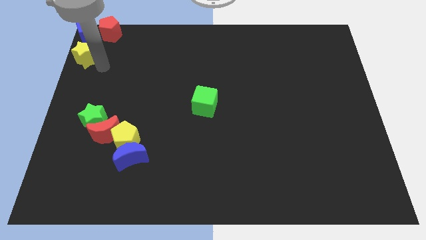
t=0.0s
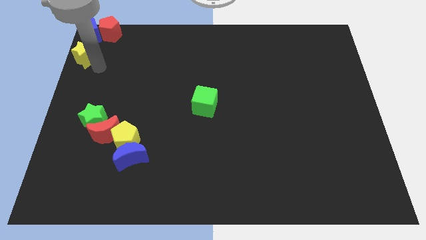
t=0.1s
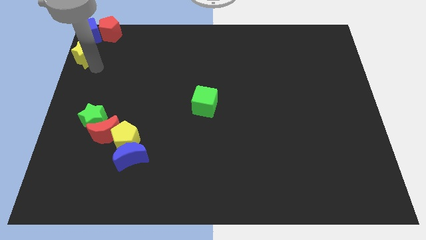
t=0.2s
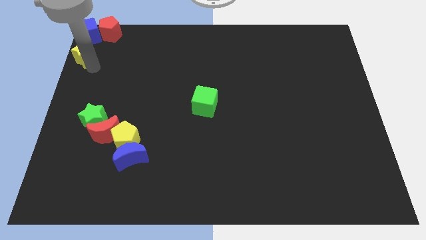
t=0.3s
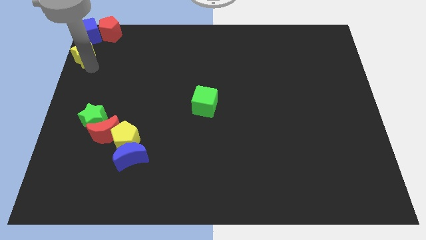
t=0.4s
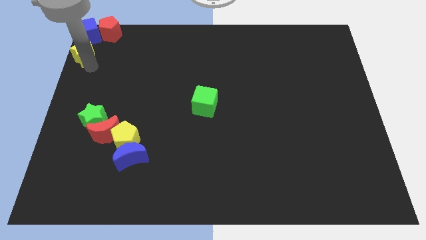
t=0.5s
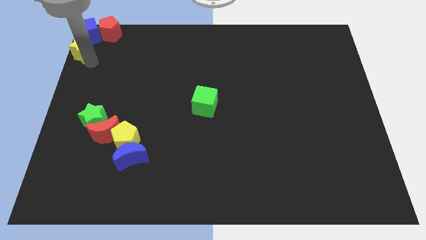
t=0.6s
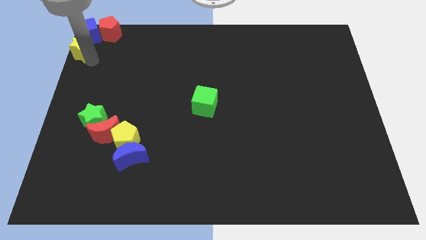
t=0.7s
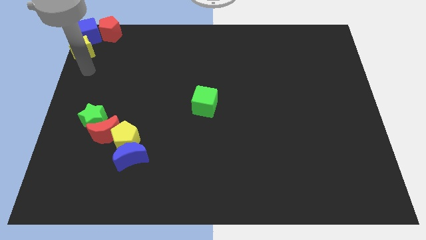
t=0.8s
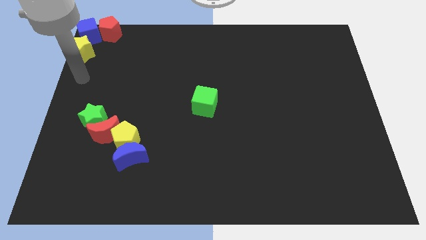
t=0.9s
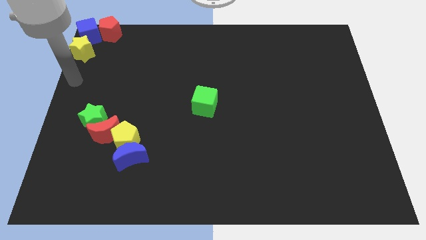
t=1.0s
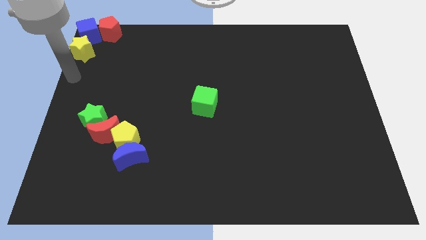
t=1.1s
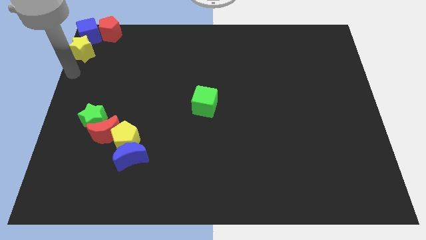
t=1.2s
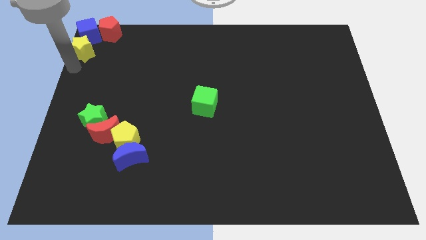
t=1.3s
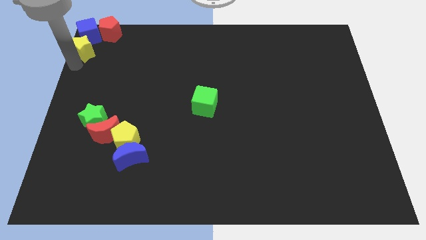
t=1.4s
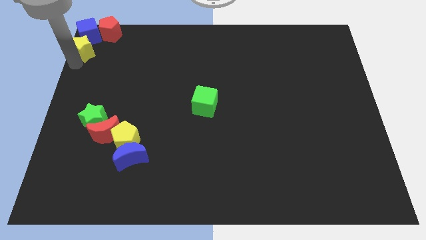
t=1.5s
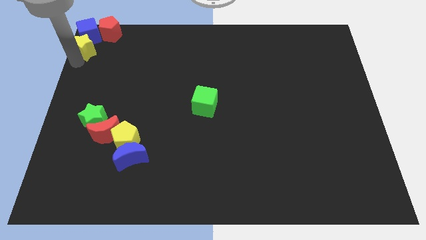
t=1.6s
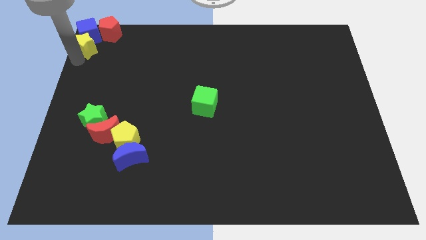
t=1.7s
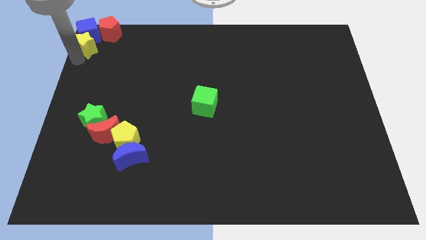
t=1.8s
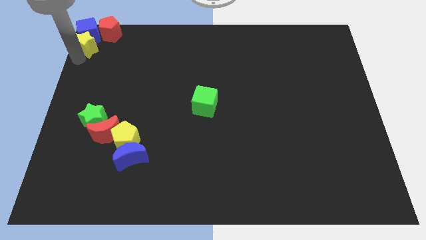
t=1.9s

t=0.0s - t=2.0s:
push the yellow star into the blue cube

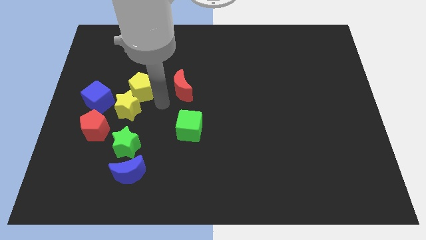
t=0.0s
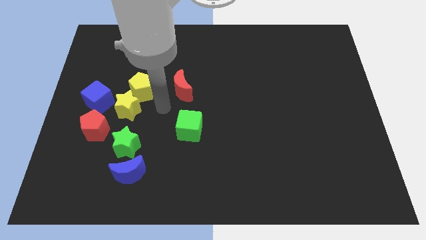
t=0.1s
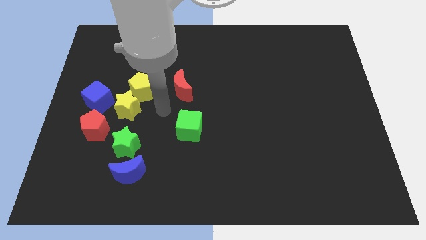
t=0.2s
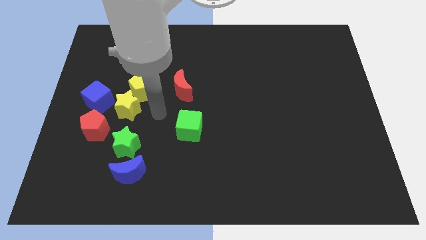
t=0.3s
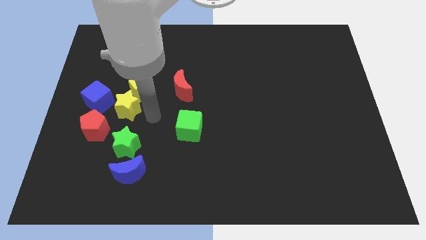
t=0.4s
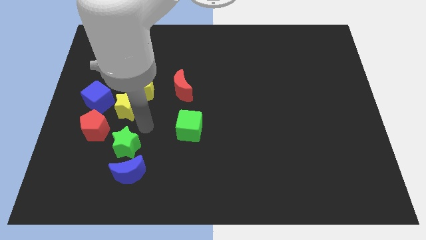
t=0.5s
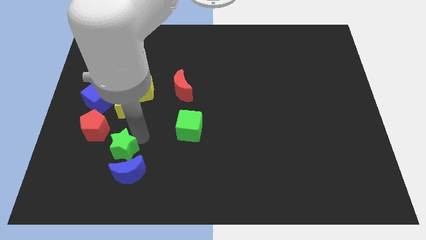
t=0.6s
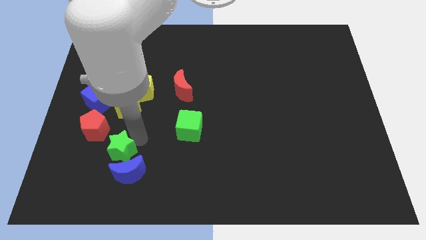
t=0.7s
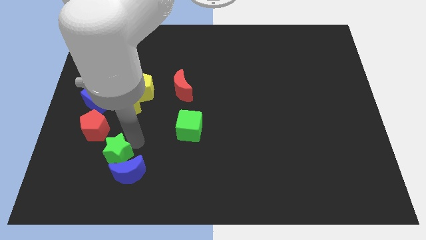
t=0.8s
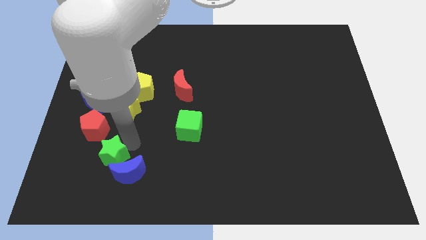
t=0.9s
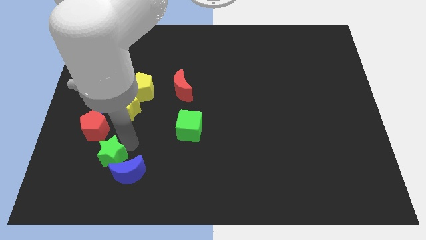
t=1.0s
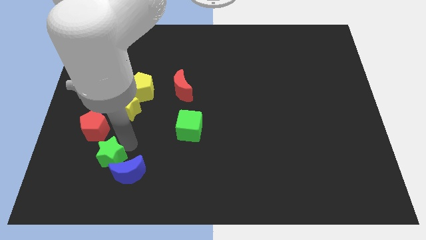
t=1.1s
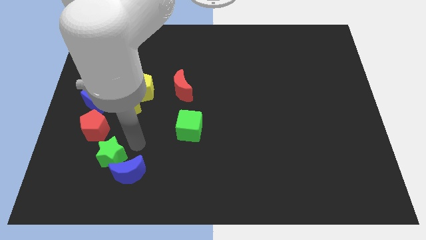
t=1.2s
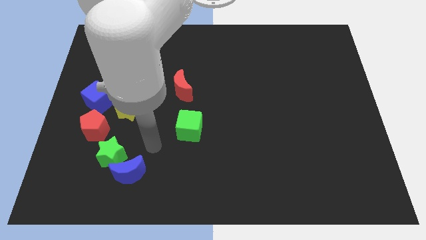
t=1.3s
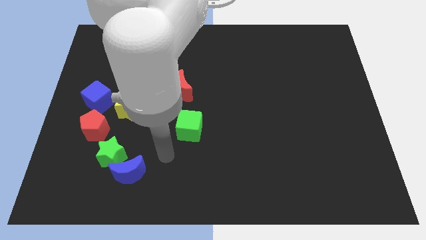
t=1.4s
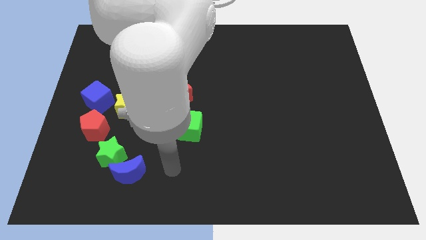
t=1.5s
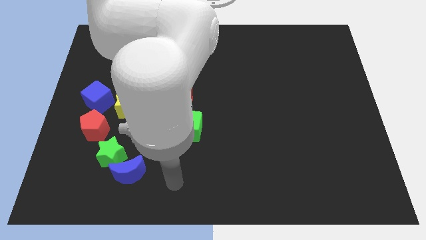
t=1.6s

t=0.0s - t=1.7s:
place green star to the bottom right of the red pentagon

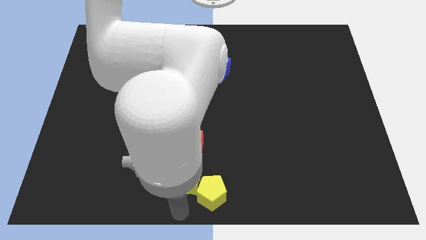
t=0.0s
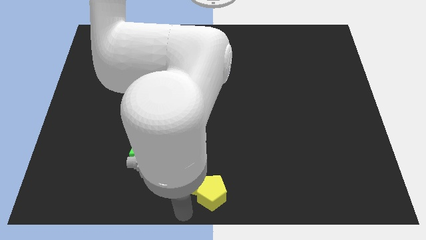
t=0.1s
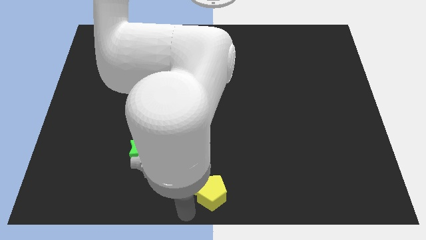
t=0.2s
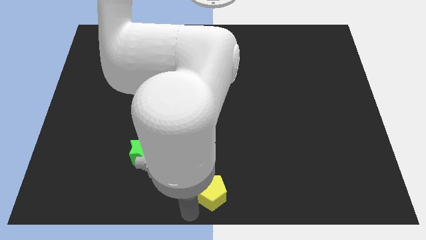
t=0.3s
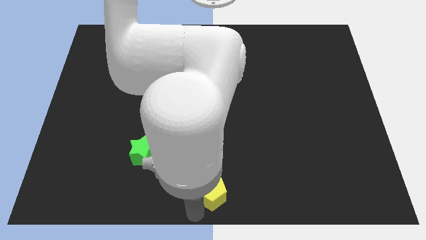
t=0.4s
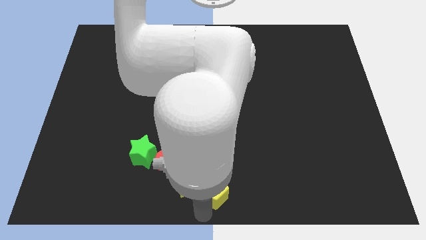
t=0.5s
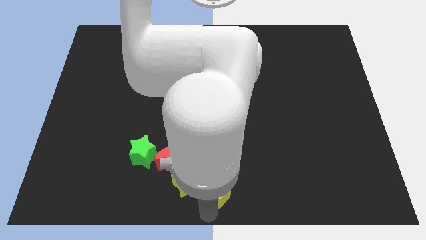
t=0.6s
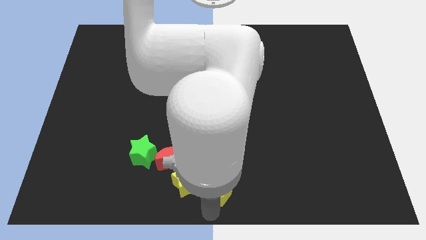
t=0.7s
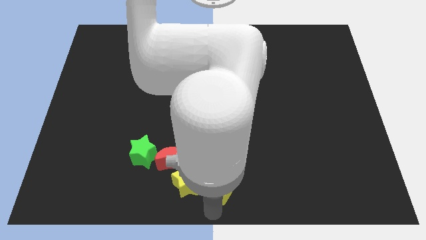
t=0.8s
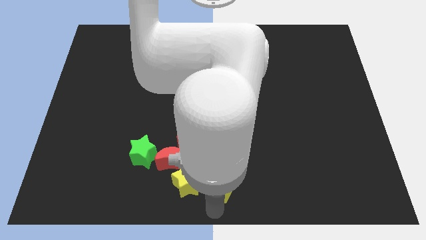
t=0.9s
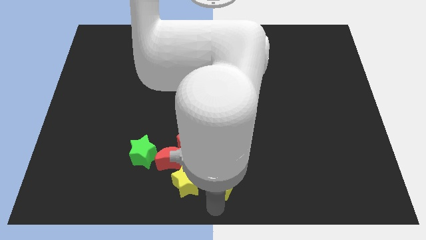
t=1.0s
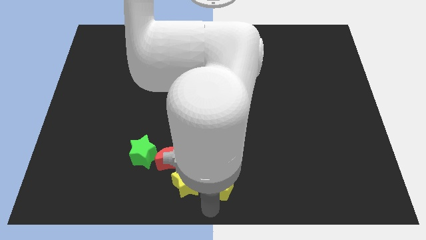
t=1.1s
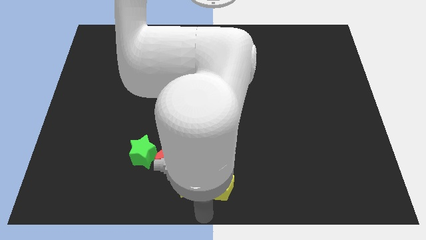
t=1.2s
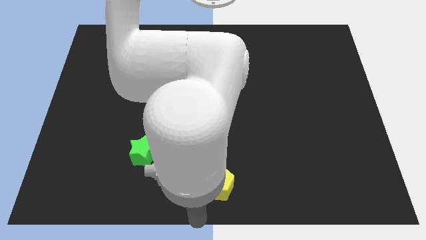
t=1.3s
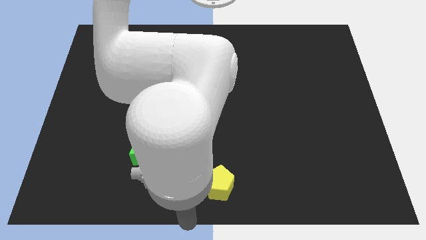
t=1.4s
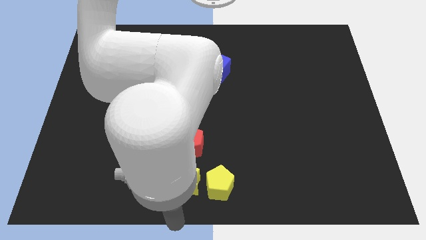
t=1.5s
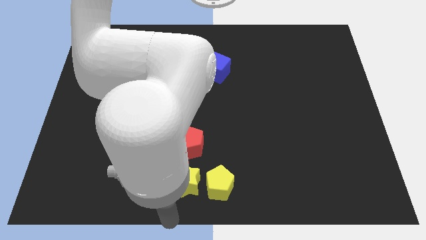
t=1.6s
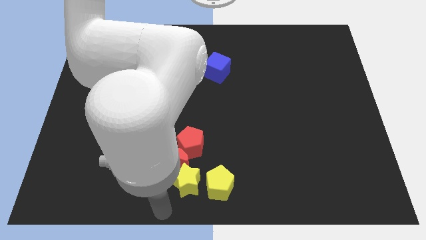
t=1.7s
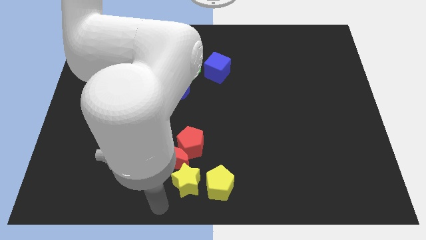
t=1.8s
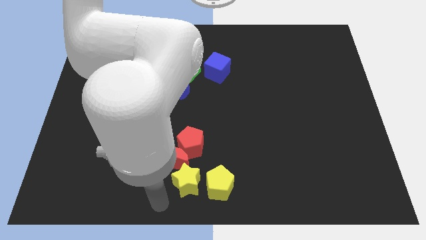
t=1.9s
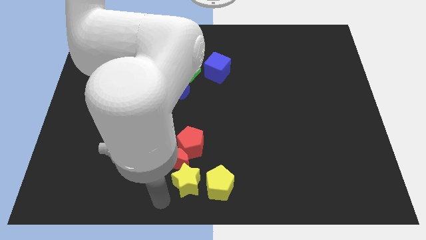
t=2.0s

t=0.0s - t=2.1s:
slide the yellow pentagon to the right of the yellow star

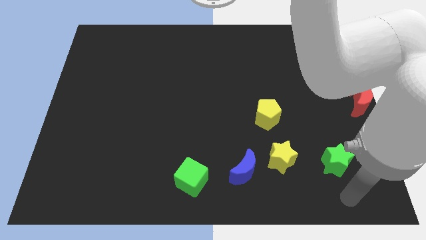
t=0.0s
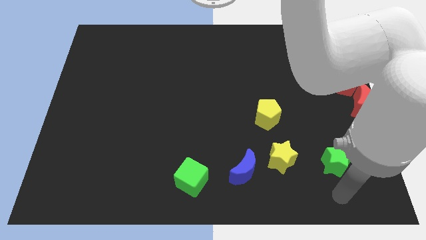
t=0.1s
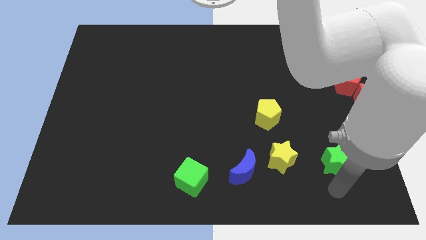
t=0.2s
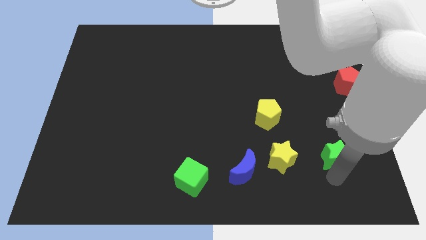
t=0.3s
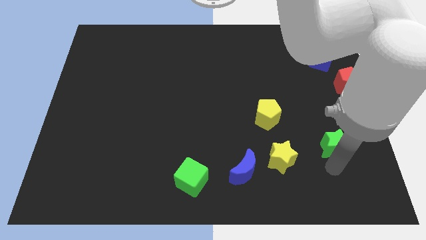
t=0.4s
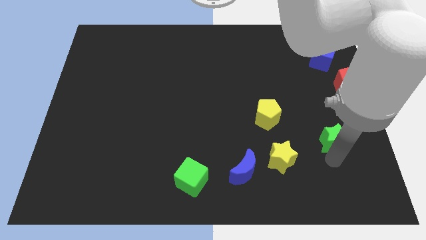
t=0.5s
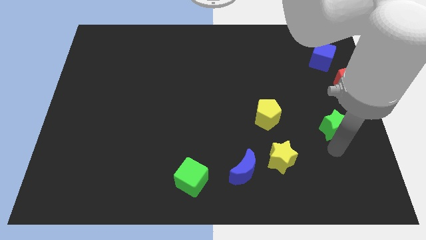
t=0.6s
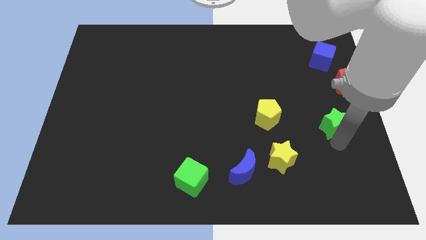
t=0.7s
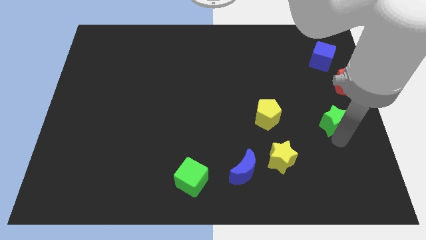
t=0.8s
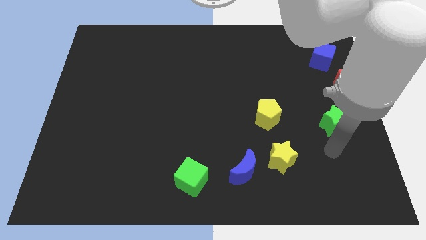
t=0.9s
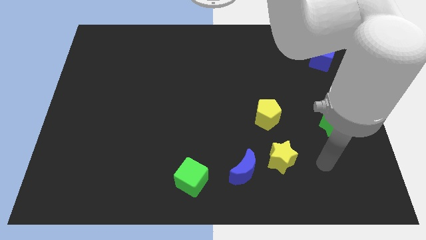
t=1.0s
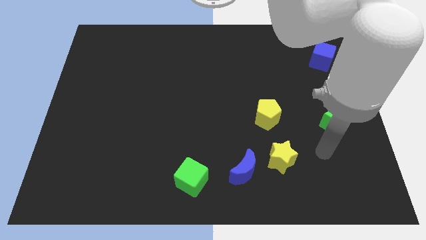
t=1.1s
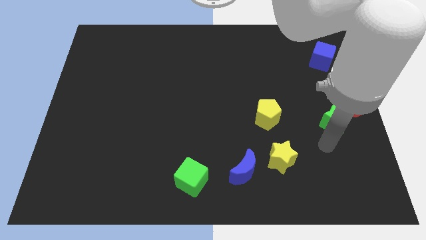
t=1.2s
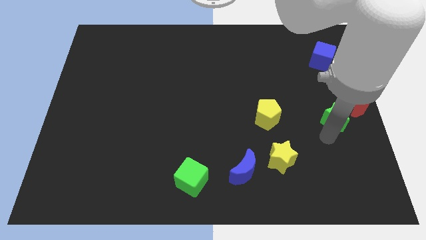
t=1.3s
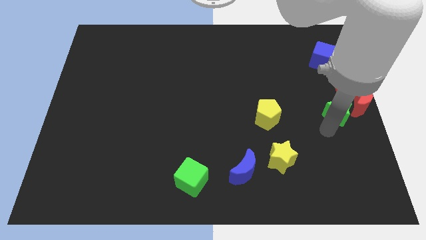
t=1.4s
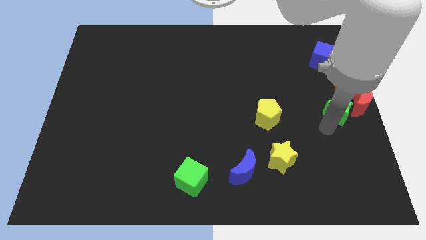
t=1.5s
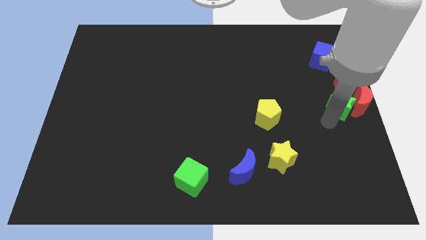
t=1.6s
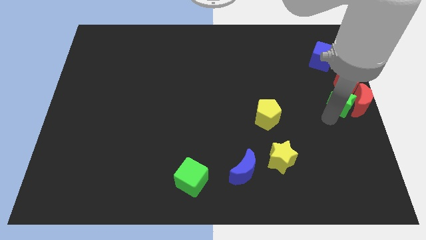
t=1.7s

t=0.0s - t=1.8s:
place the green star left to the red moon

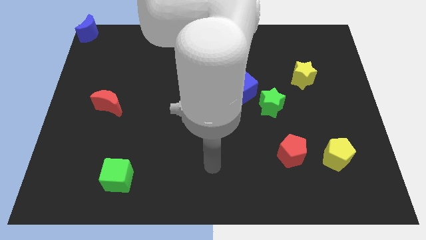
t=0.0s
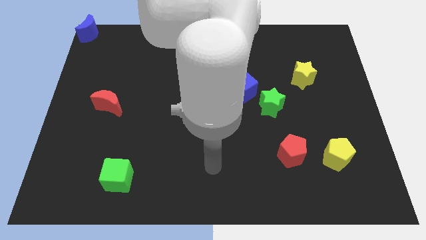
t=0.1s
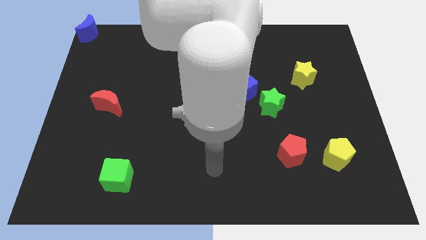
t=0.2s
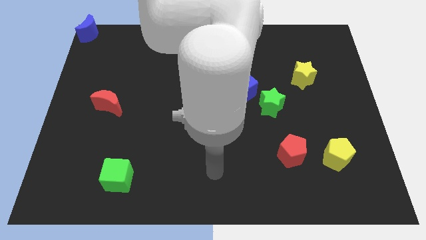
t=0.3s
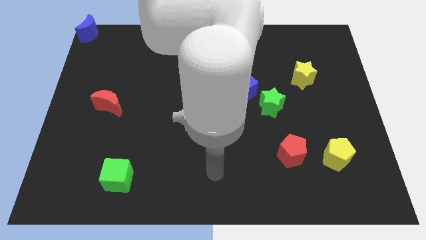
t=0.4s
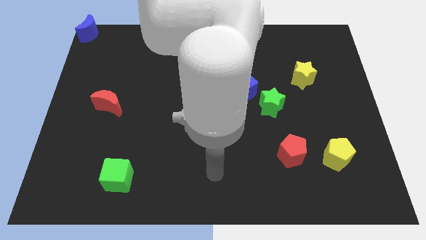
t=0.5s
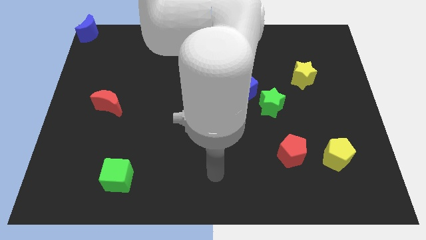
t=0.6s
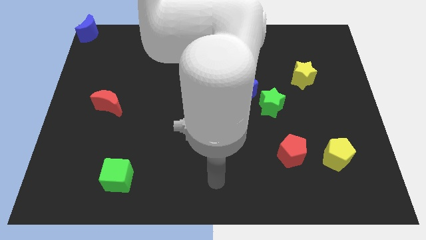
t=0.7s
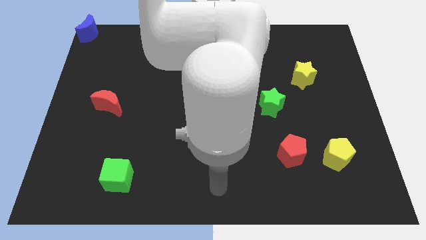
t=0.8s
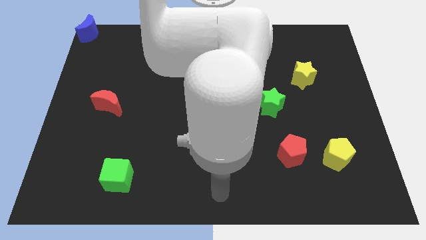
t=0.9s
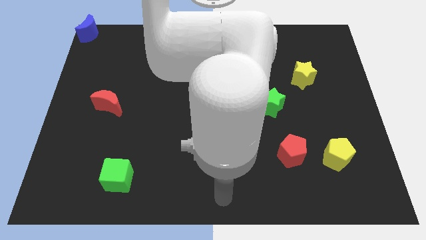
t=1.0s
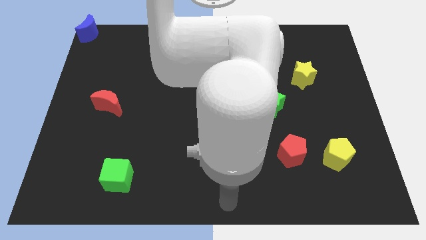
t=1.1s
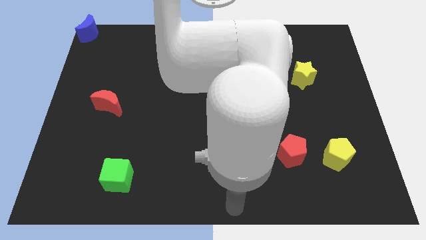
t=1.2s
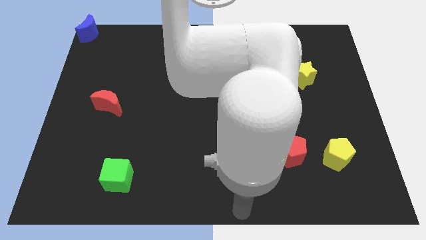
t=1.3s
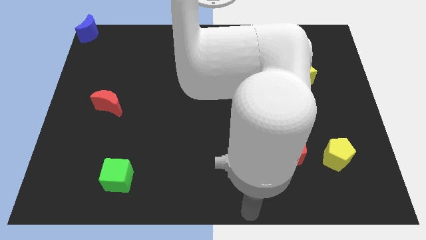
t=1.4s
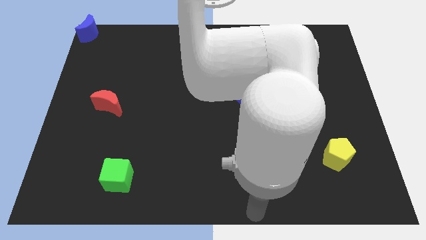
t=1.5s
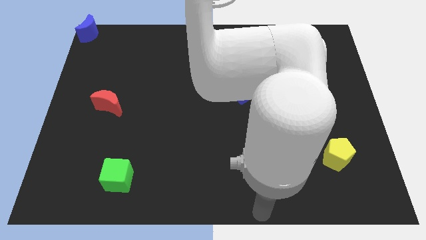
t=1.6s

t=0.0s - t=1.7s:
move your hand at the bottom center
